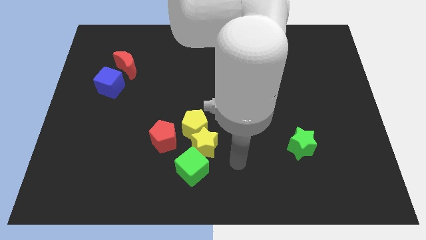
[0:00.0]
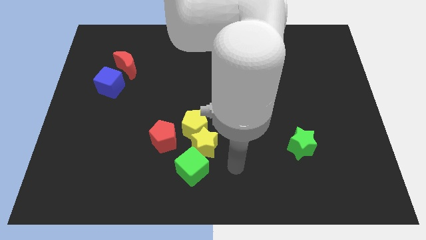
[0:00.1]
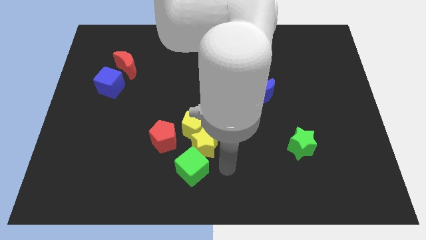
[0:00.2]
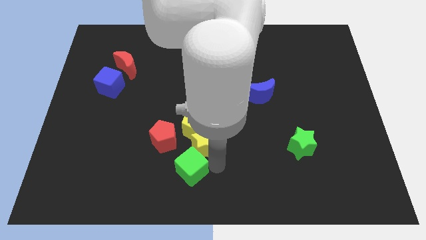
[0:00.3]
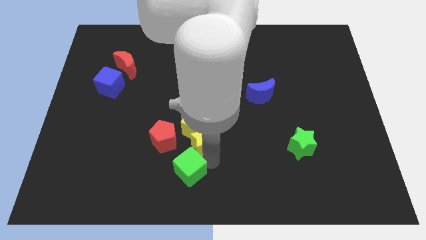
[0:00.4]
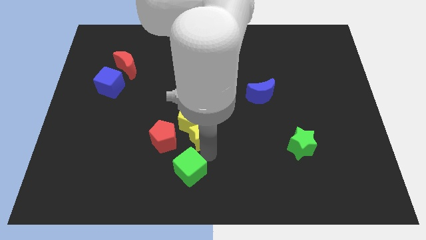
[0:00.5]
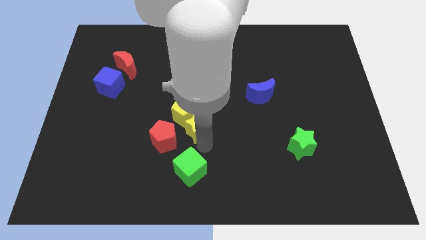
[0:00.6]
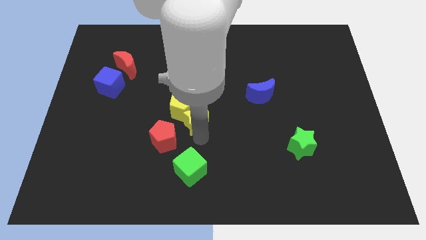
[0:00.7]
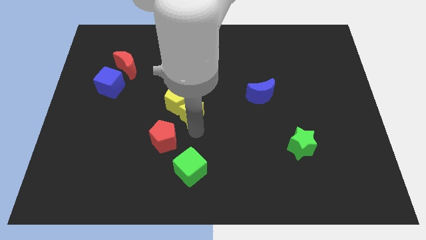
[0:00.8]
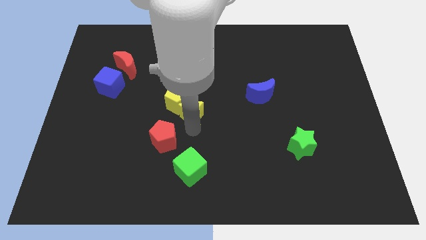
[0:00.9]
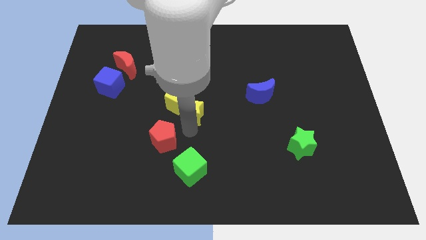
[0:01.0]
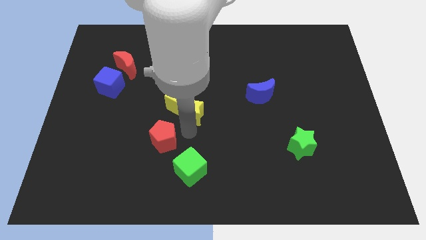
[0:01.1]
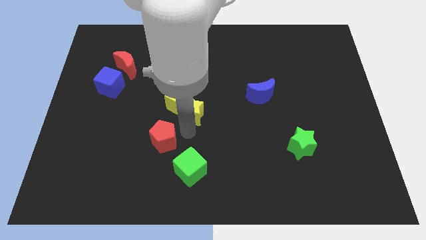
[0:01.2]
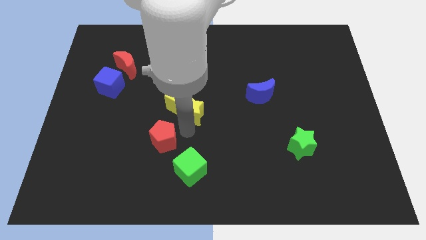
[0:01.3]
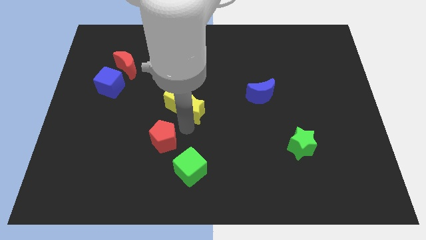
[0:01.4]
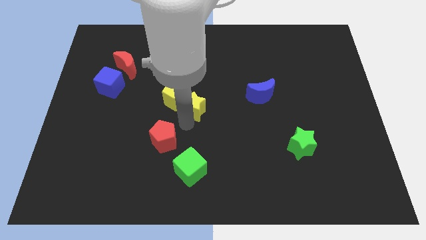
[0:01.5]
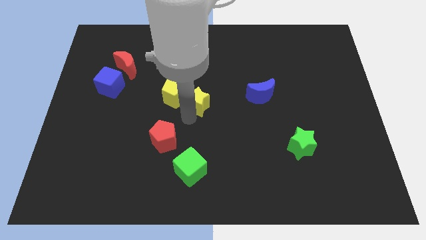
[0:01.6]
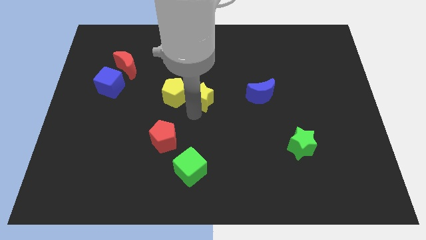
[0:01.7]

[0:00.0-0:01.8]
push the yellow pentagon above the red pentagon

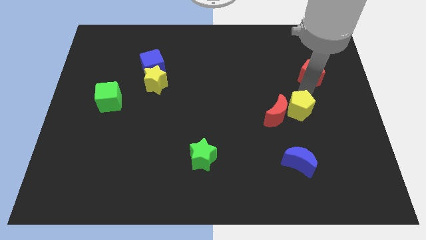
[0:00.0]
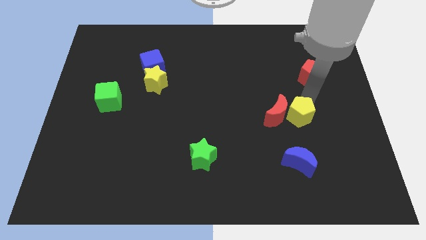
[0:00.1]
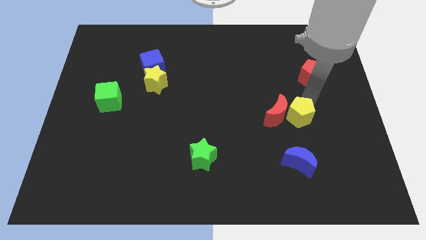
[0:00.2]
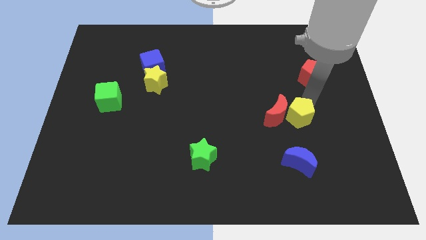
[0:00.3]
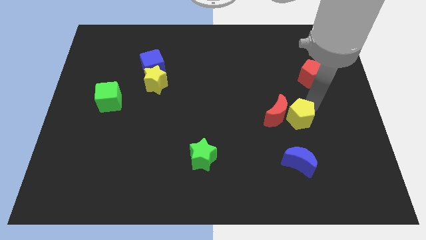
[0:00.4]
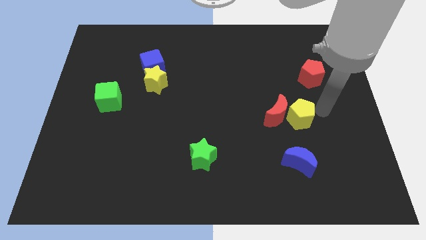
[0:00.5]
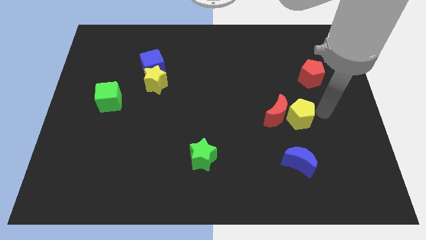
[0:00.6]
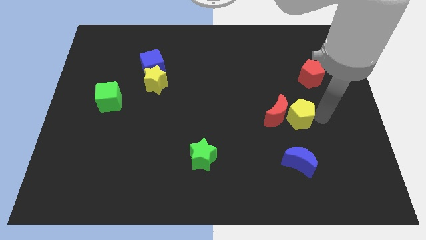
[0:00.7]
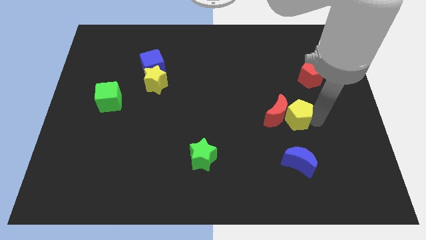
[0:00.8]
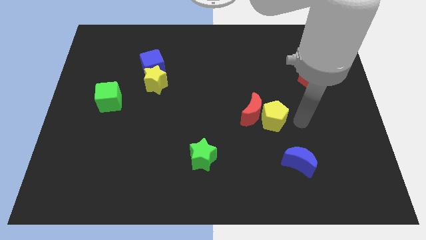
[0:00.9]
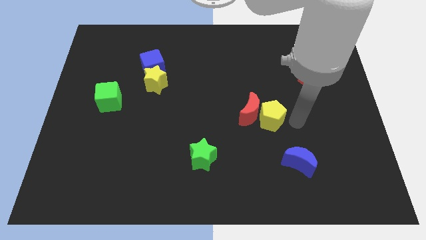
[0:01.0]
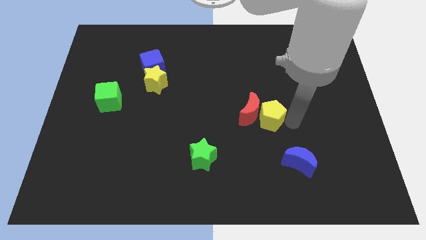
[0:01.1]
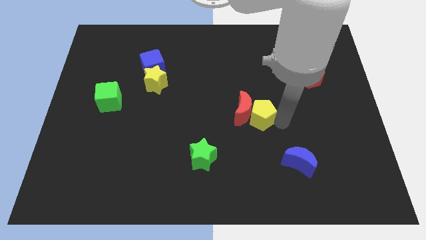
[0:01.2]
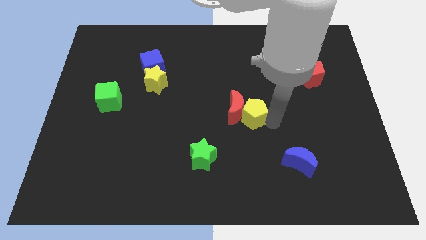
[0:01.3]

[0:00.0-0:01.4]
move the yellow pentagon into the red crescent

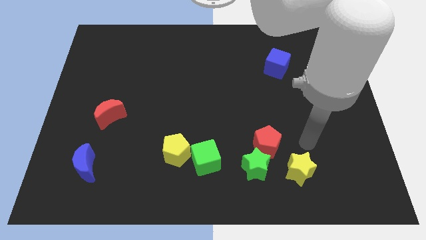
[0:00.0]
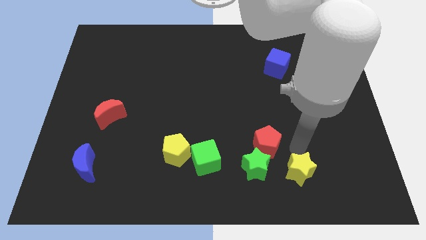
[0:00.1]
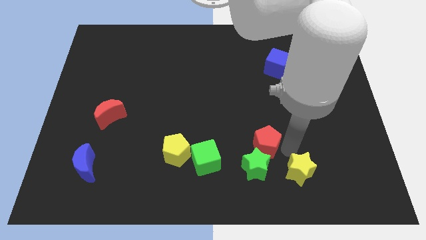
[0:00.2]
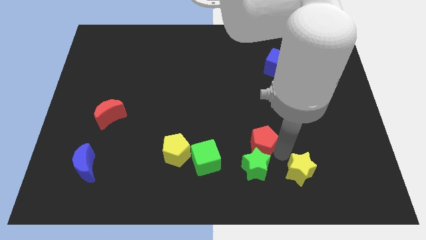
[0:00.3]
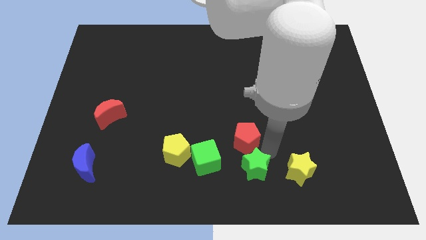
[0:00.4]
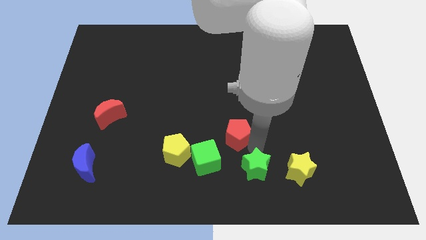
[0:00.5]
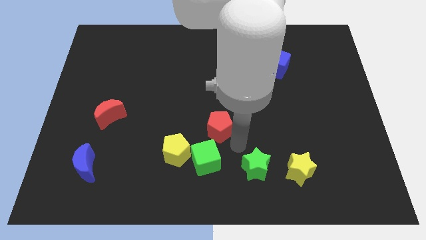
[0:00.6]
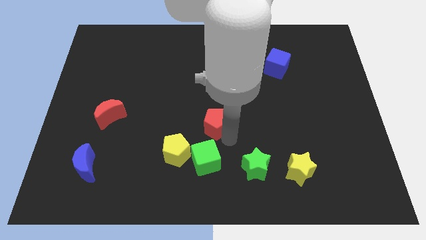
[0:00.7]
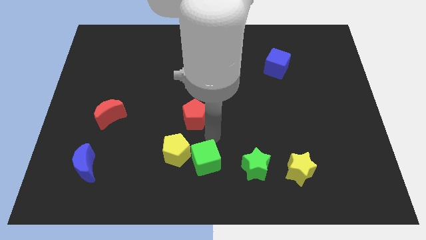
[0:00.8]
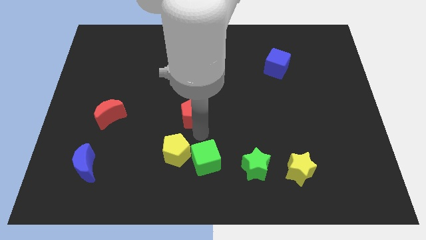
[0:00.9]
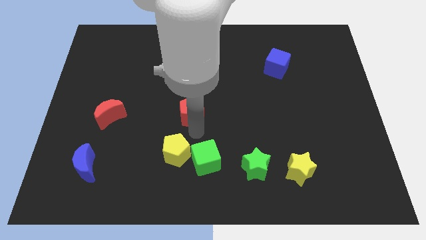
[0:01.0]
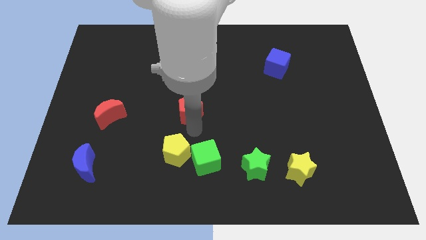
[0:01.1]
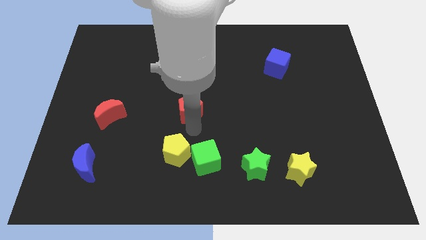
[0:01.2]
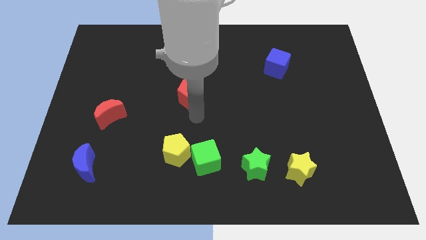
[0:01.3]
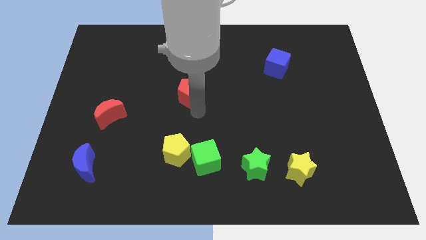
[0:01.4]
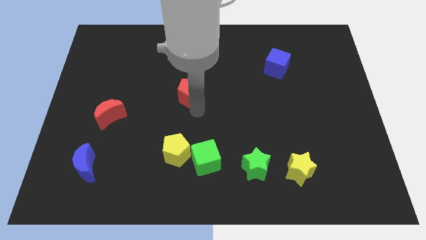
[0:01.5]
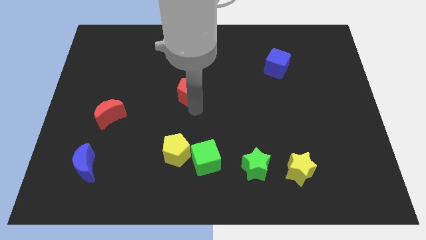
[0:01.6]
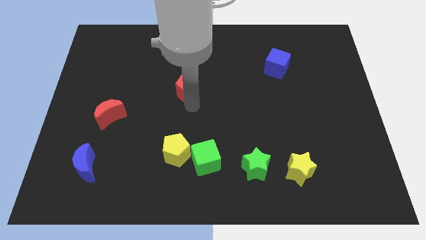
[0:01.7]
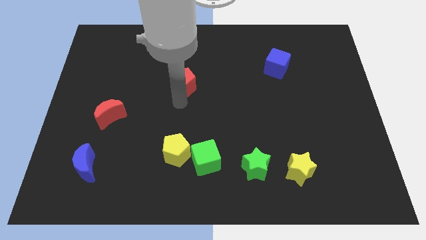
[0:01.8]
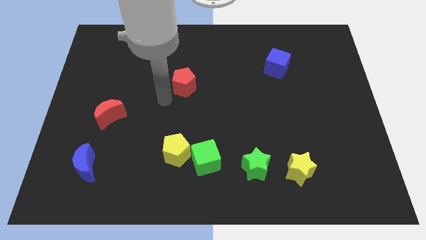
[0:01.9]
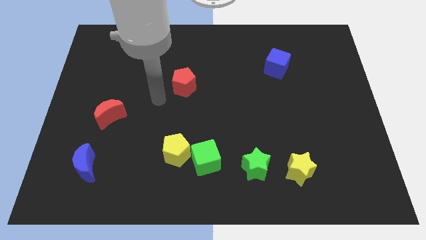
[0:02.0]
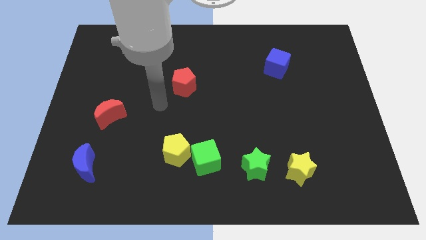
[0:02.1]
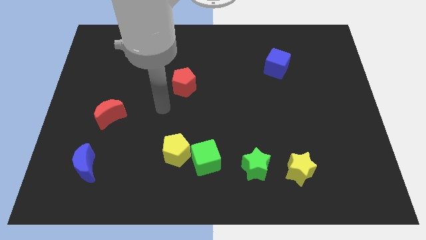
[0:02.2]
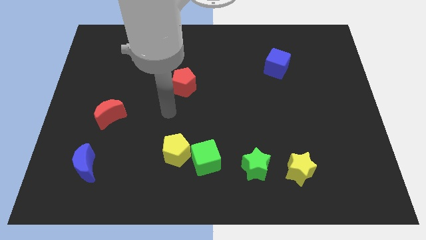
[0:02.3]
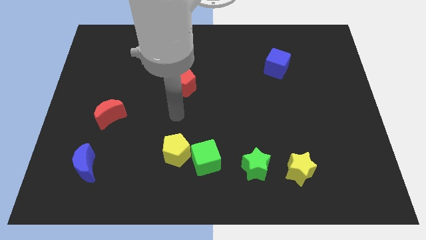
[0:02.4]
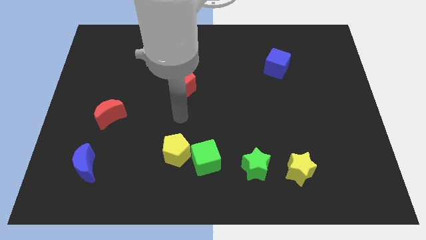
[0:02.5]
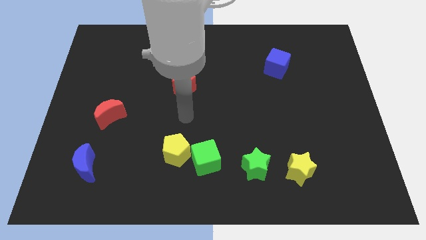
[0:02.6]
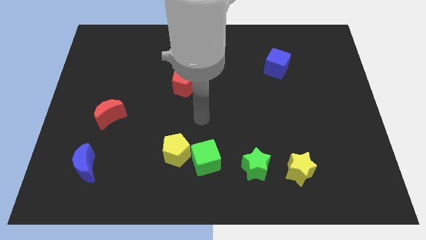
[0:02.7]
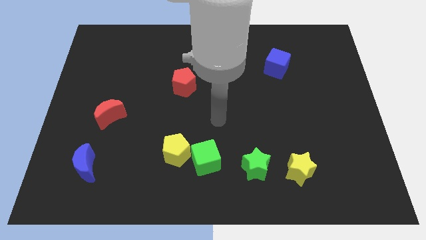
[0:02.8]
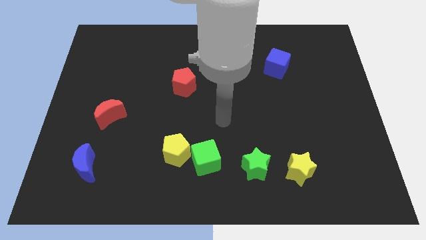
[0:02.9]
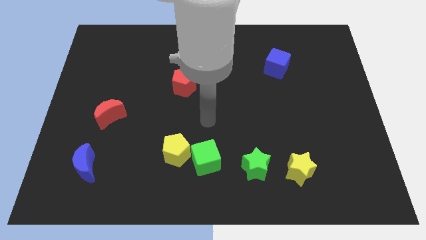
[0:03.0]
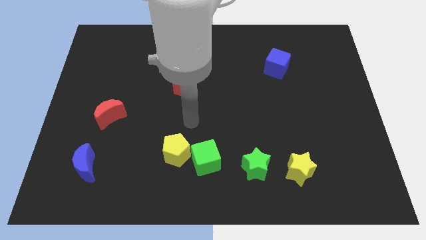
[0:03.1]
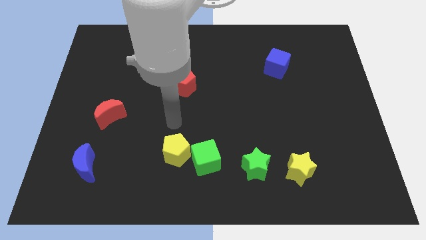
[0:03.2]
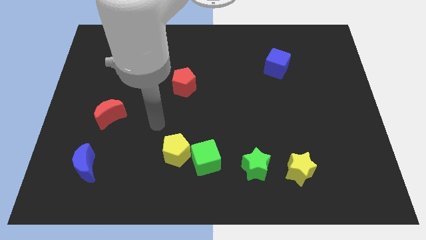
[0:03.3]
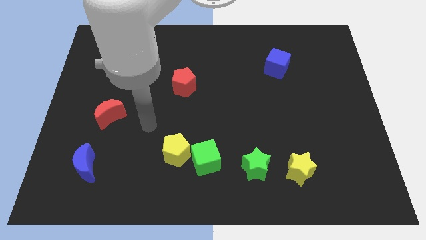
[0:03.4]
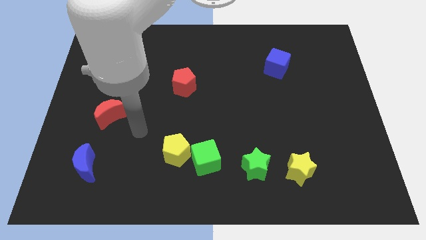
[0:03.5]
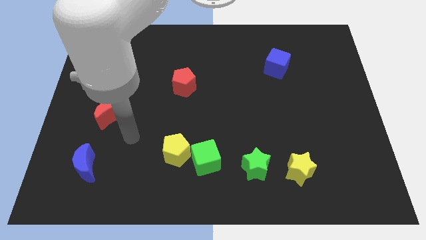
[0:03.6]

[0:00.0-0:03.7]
push the red pentagon to the top of the board

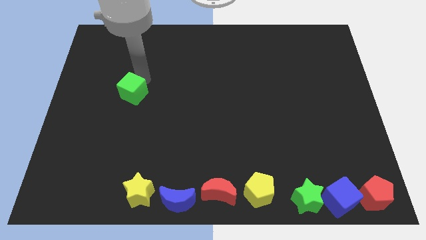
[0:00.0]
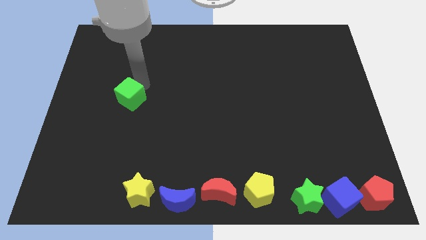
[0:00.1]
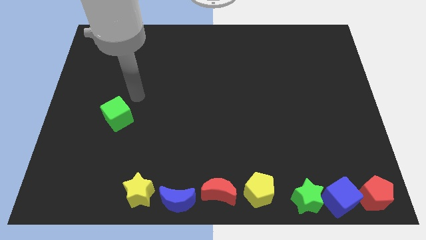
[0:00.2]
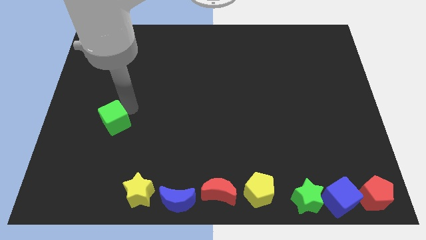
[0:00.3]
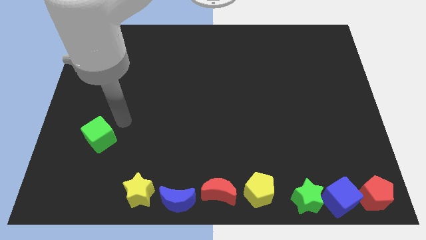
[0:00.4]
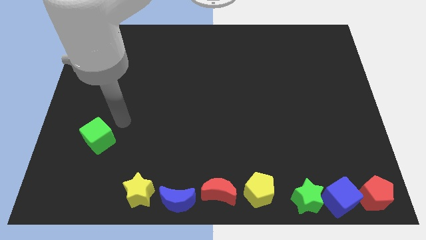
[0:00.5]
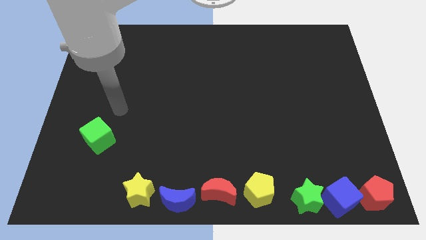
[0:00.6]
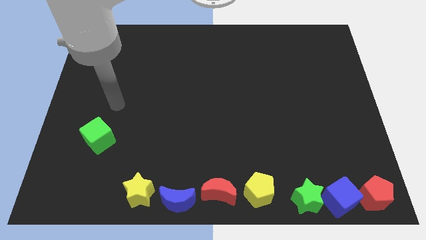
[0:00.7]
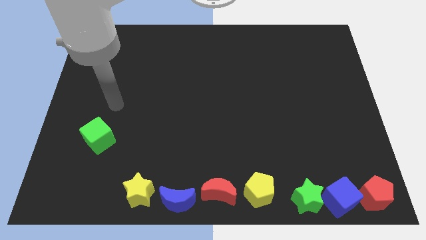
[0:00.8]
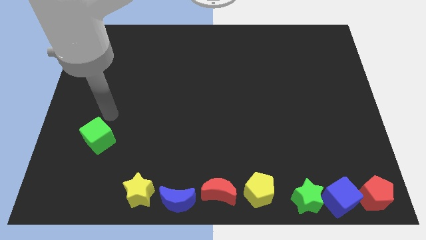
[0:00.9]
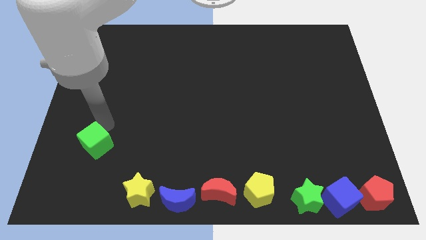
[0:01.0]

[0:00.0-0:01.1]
place the green cube diagonally to the top left of the yellow star

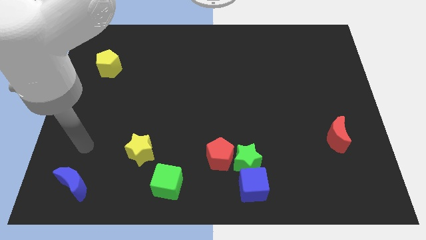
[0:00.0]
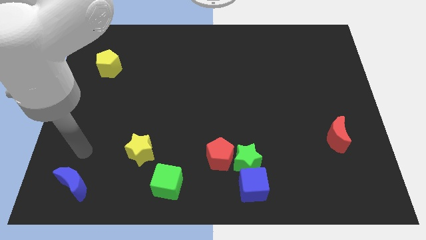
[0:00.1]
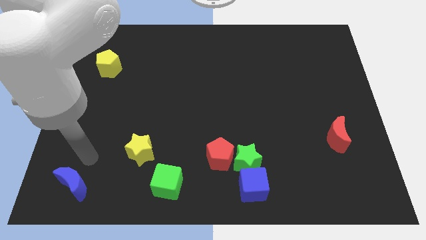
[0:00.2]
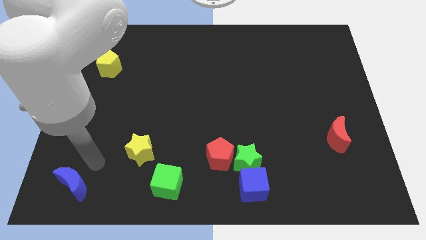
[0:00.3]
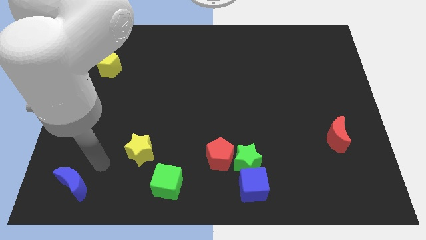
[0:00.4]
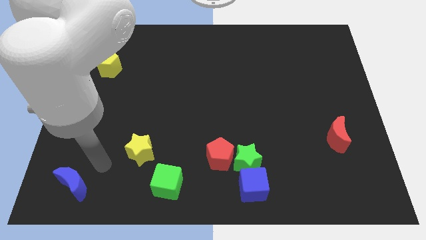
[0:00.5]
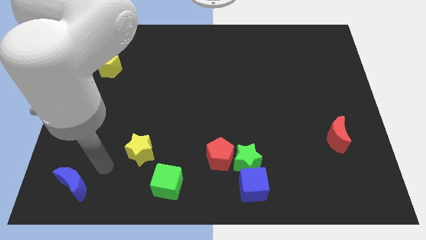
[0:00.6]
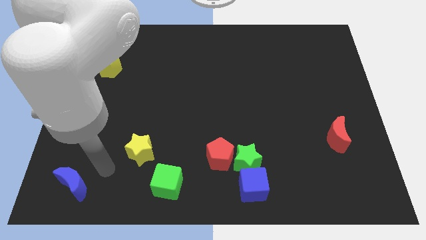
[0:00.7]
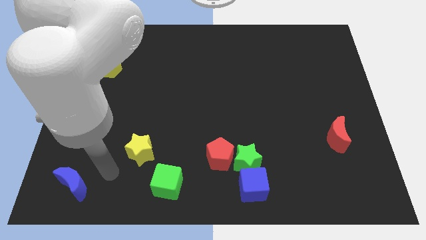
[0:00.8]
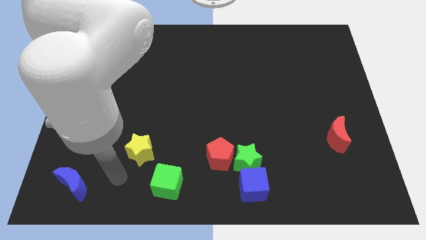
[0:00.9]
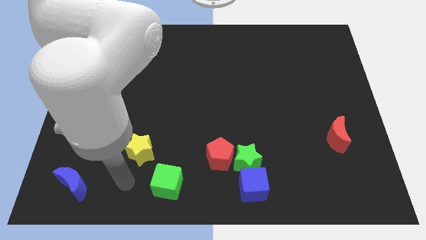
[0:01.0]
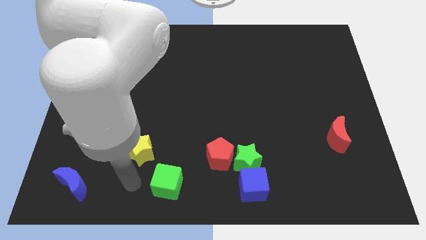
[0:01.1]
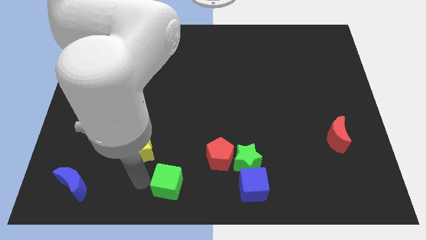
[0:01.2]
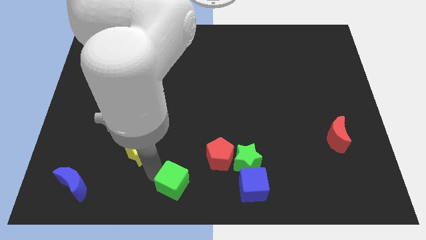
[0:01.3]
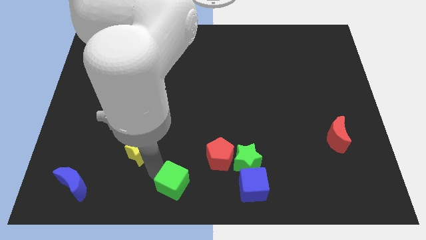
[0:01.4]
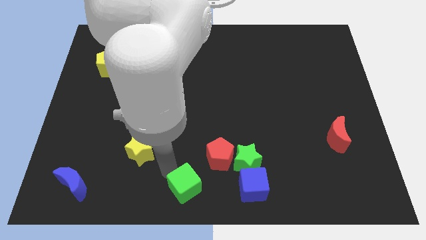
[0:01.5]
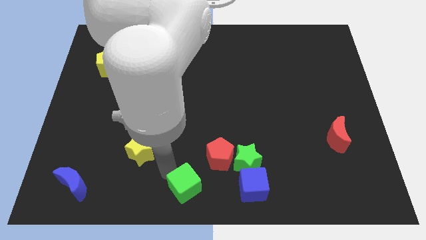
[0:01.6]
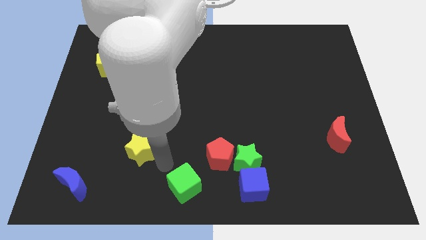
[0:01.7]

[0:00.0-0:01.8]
move the green cube to the right of the board
